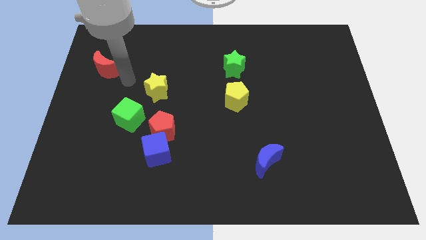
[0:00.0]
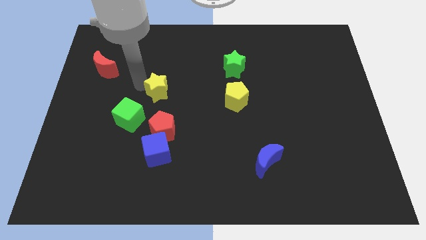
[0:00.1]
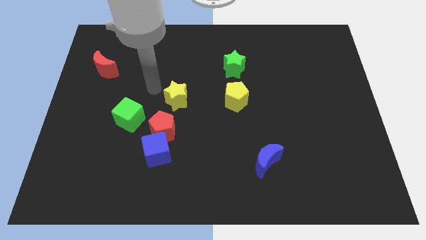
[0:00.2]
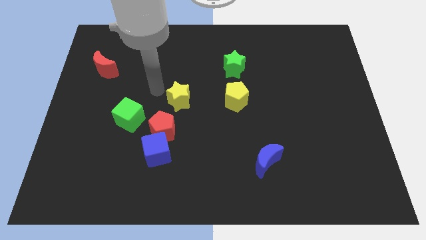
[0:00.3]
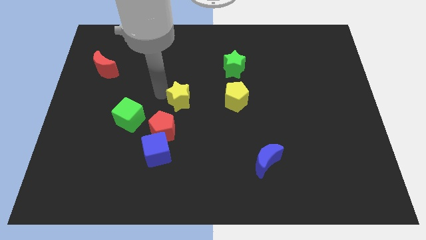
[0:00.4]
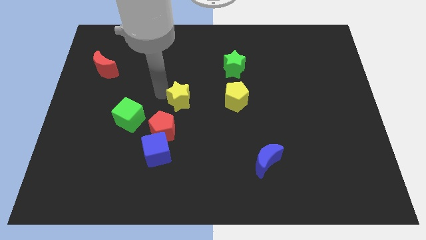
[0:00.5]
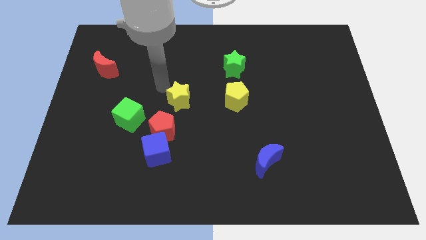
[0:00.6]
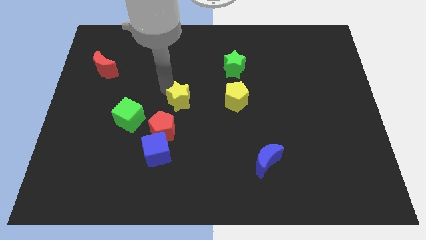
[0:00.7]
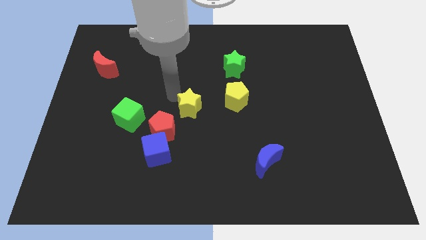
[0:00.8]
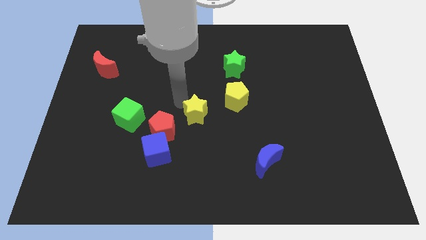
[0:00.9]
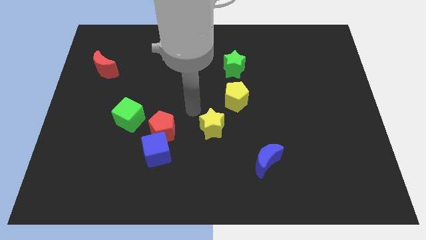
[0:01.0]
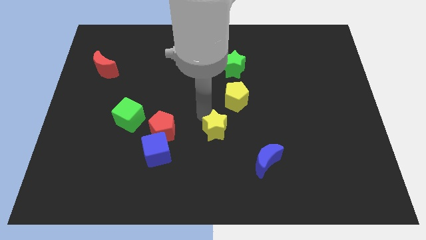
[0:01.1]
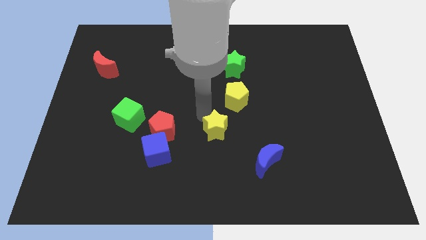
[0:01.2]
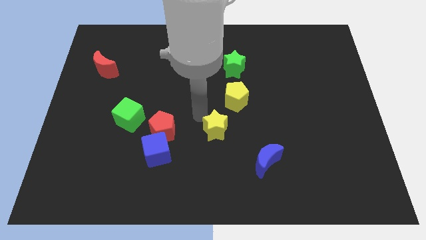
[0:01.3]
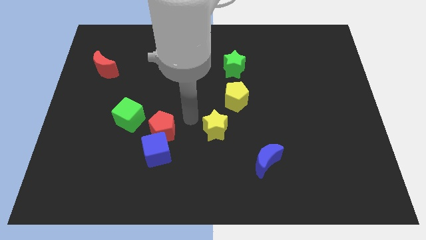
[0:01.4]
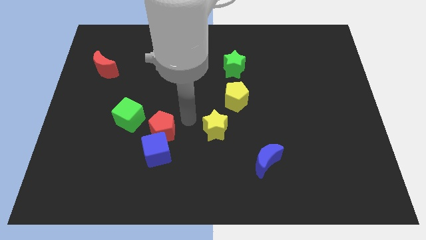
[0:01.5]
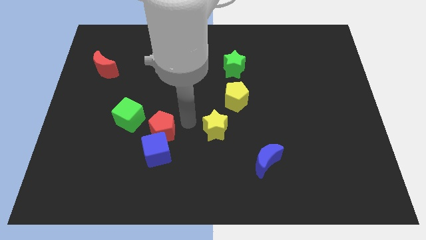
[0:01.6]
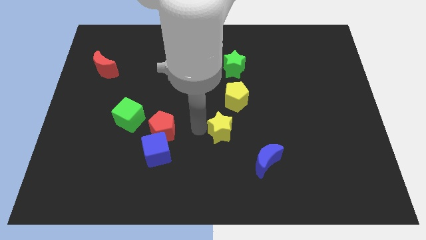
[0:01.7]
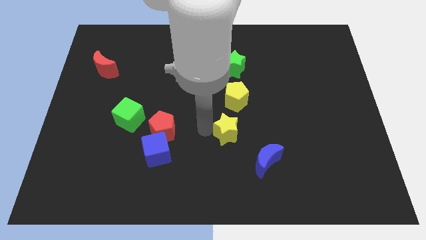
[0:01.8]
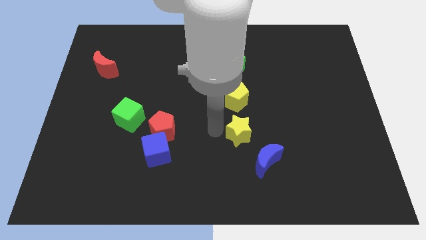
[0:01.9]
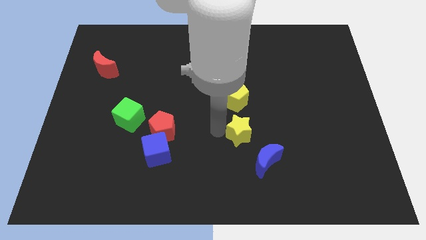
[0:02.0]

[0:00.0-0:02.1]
place the yellow star to the bottom of the yellow pentagon

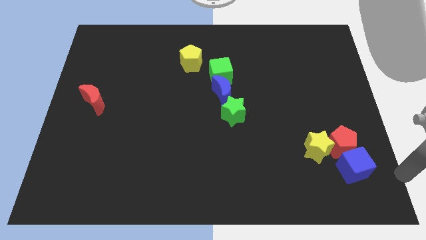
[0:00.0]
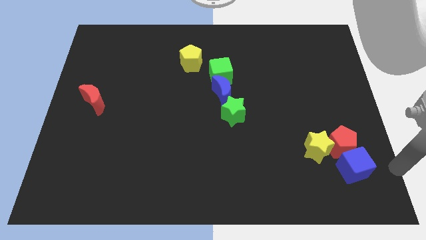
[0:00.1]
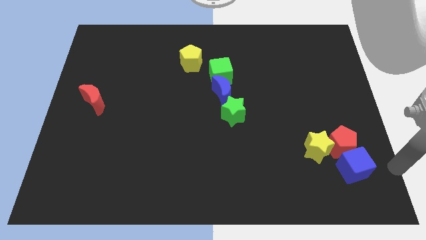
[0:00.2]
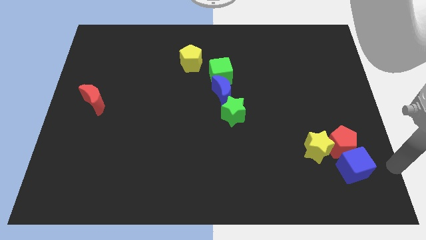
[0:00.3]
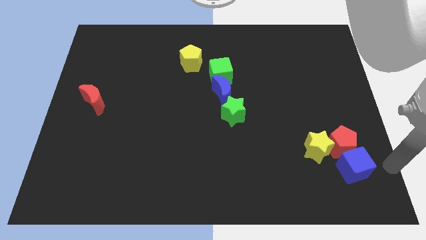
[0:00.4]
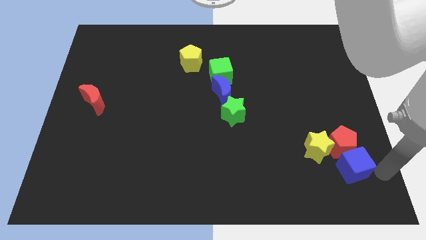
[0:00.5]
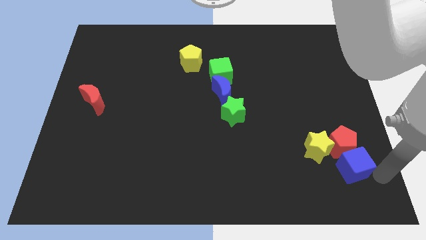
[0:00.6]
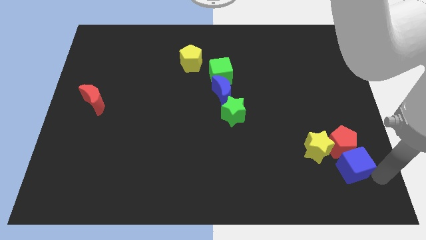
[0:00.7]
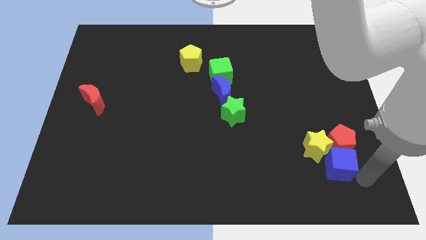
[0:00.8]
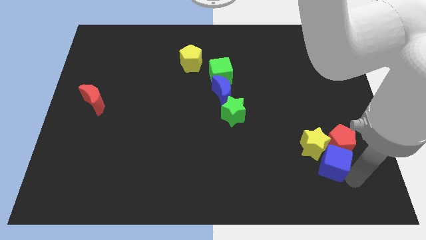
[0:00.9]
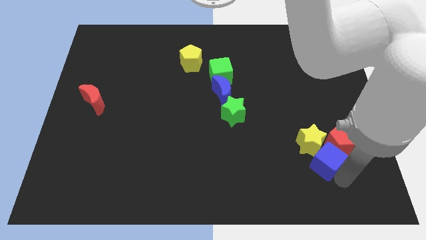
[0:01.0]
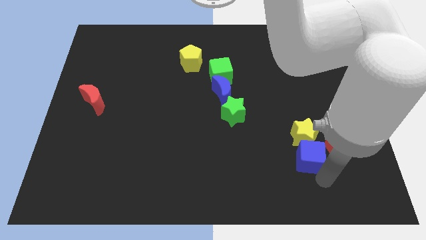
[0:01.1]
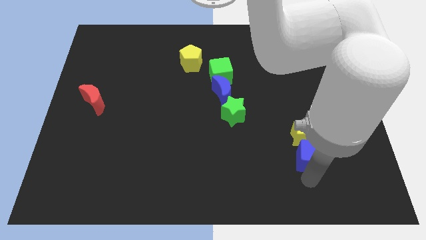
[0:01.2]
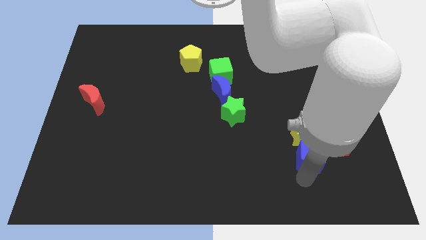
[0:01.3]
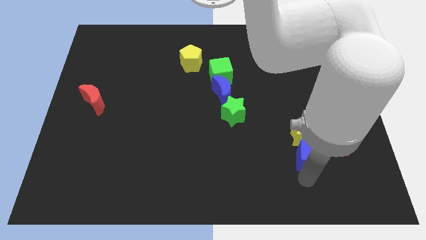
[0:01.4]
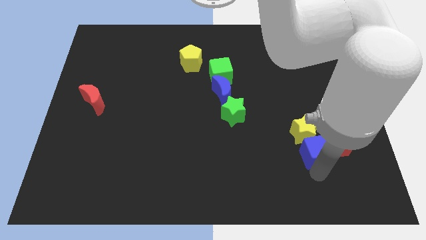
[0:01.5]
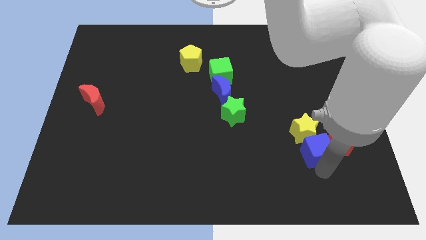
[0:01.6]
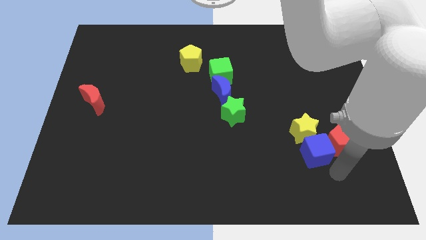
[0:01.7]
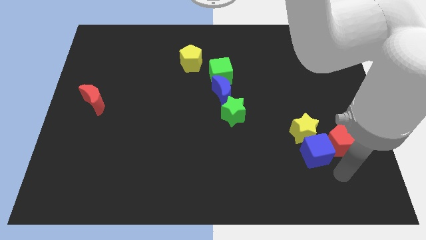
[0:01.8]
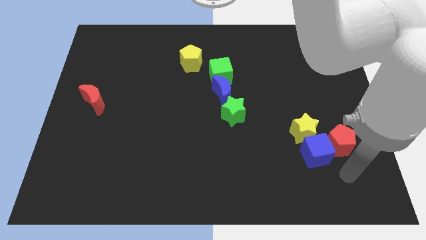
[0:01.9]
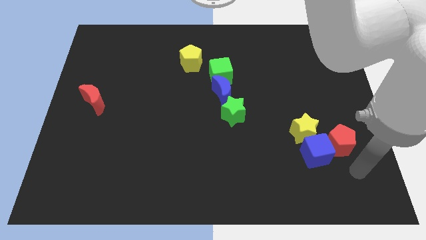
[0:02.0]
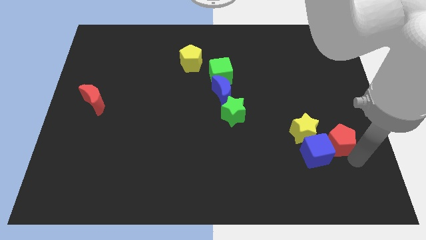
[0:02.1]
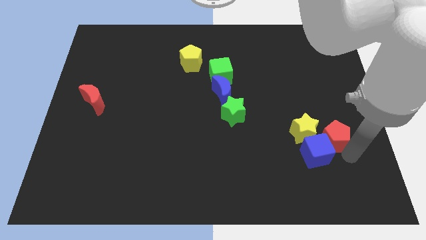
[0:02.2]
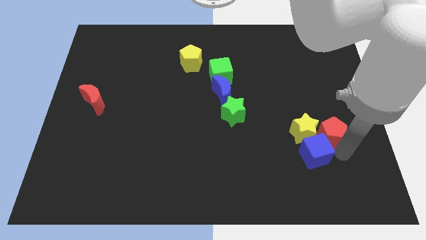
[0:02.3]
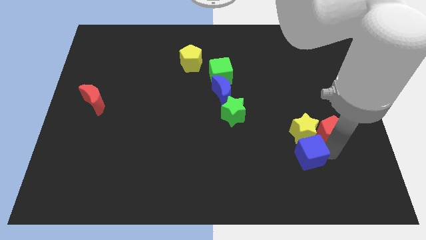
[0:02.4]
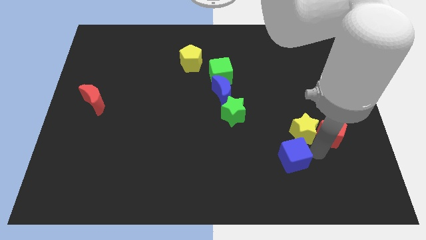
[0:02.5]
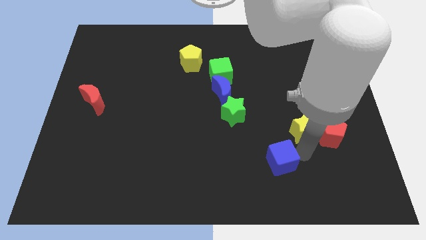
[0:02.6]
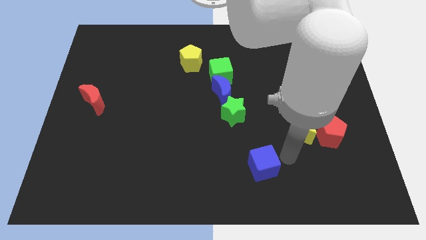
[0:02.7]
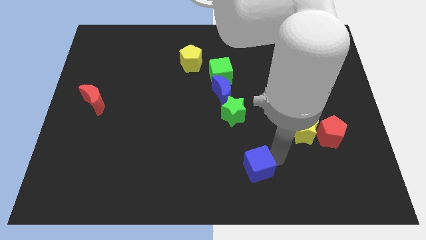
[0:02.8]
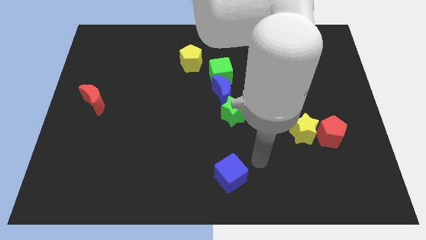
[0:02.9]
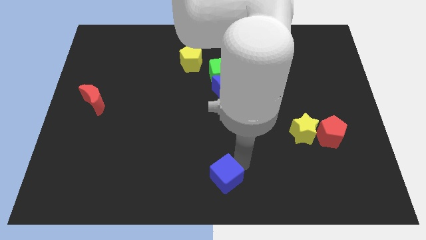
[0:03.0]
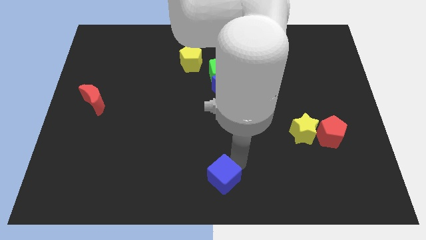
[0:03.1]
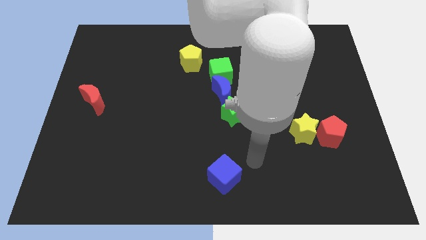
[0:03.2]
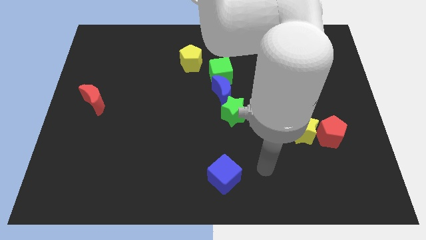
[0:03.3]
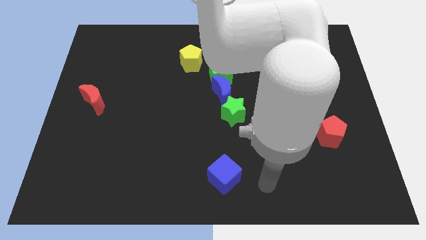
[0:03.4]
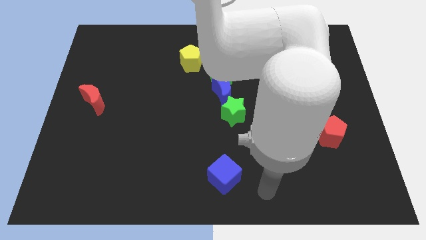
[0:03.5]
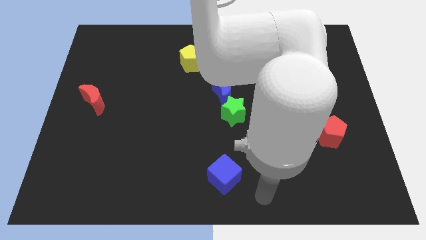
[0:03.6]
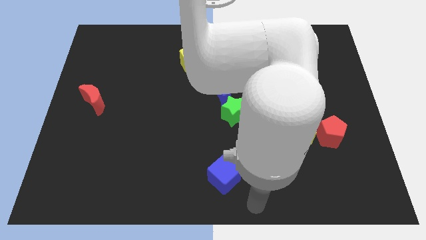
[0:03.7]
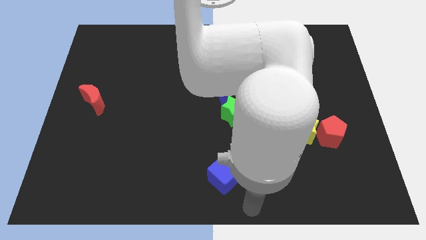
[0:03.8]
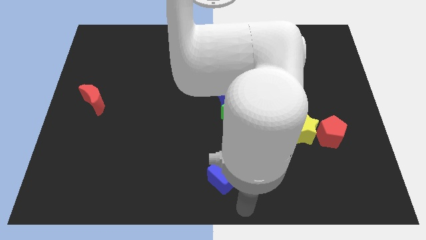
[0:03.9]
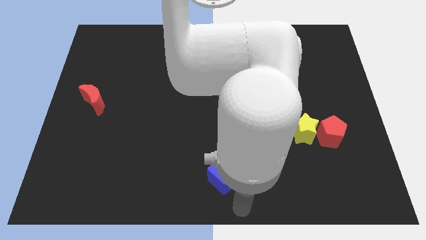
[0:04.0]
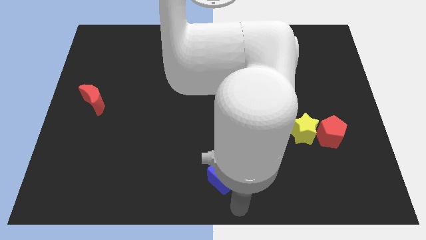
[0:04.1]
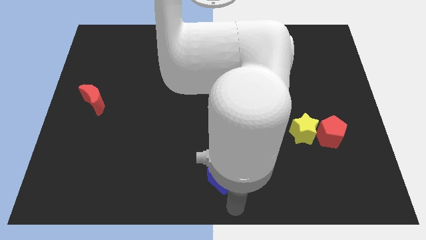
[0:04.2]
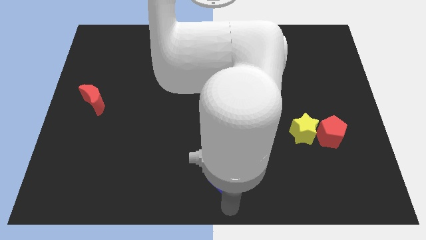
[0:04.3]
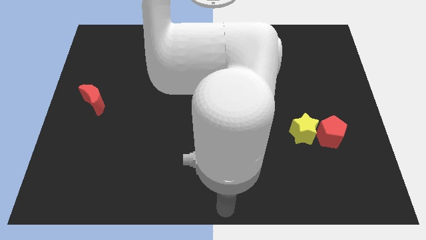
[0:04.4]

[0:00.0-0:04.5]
push blue block away from yellow star and red pentagon

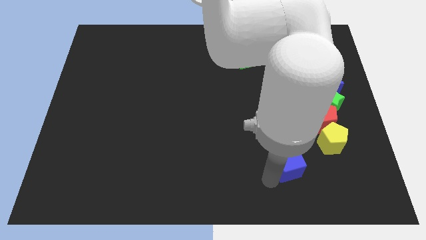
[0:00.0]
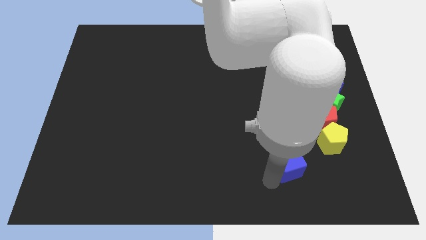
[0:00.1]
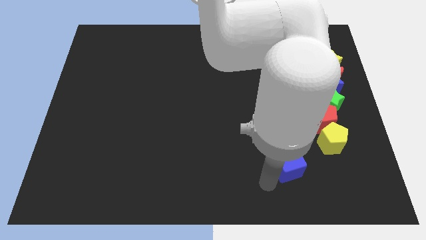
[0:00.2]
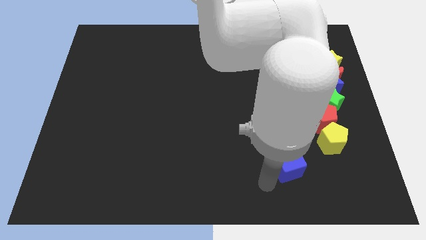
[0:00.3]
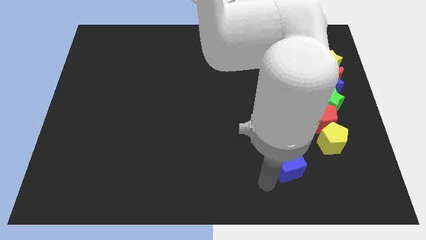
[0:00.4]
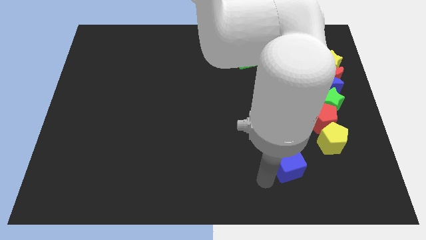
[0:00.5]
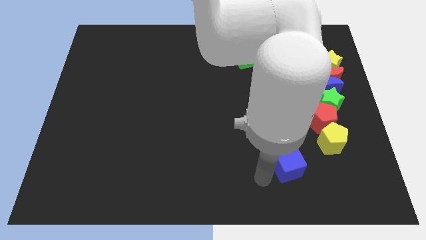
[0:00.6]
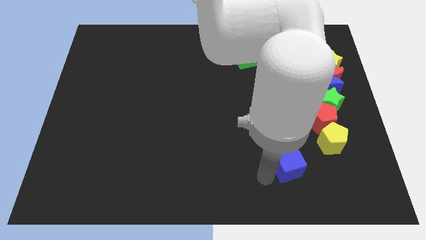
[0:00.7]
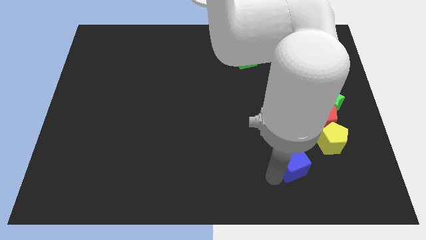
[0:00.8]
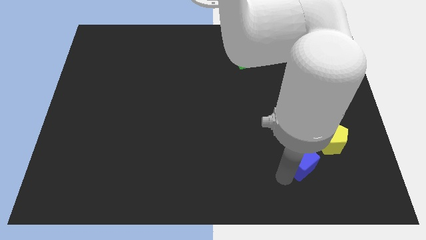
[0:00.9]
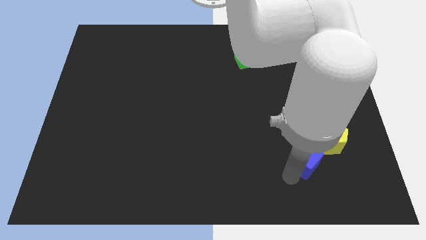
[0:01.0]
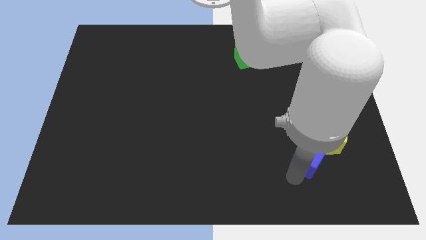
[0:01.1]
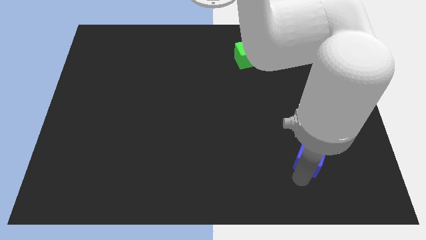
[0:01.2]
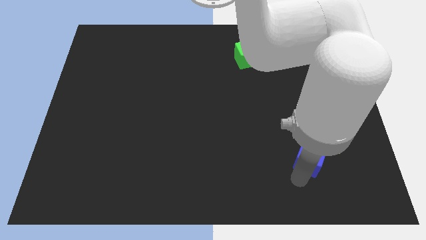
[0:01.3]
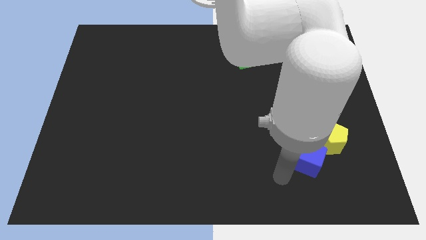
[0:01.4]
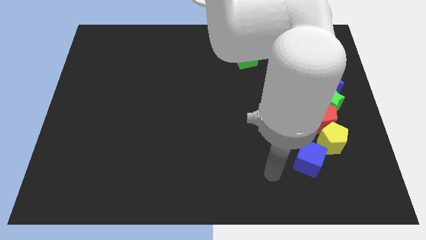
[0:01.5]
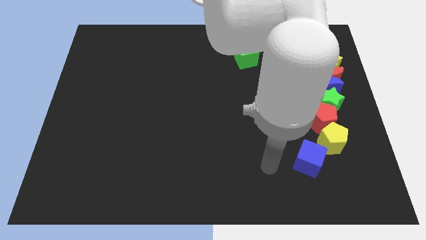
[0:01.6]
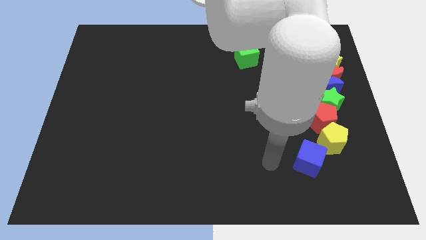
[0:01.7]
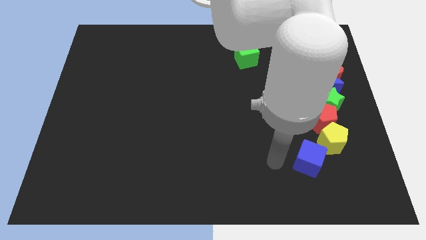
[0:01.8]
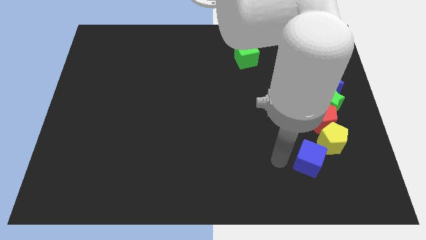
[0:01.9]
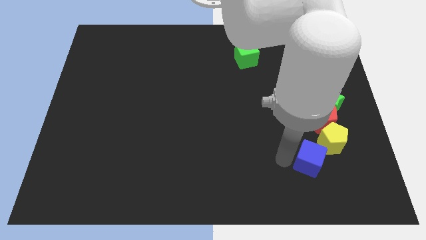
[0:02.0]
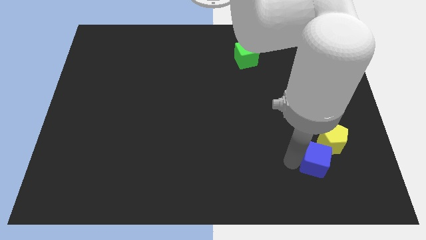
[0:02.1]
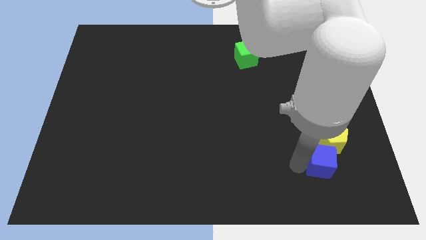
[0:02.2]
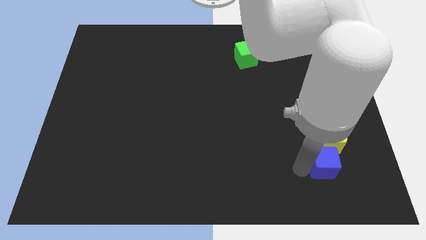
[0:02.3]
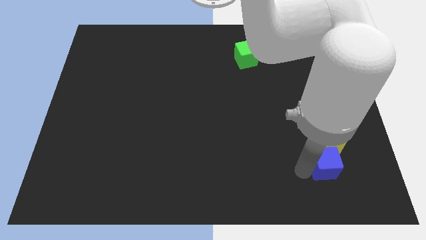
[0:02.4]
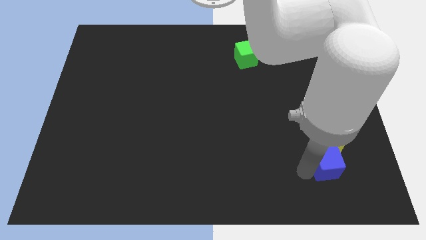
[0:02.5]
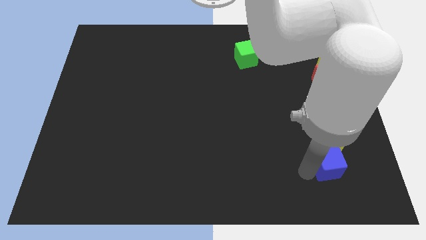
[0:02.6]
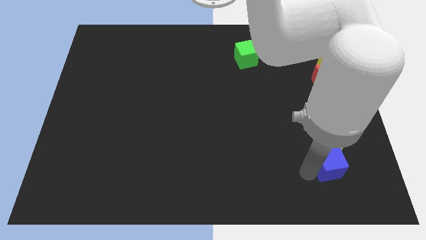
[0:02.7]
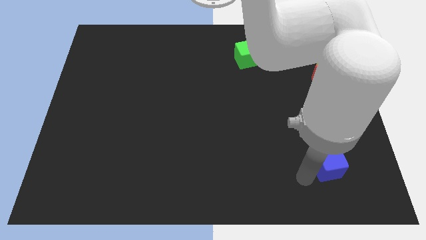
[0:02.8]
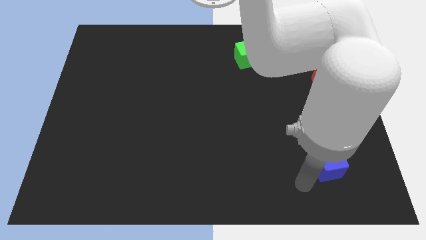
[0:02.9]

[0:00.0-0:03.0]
place the blue cube below to the yellow pentagon
